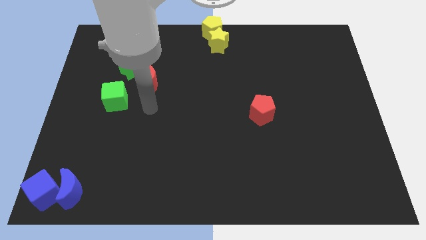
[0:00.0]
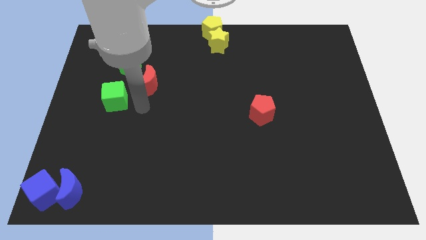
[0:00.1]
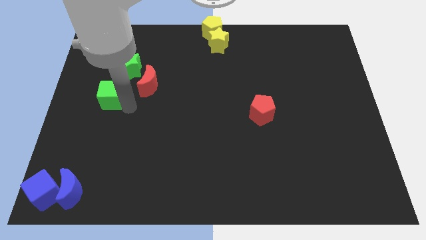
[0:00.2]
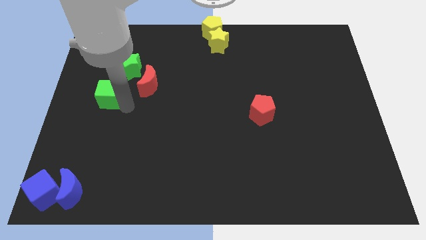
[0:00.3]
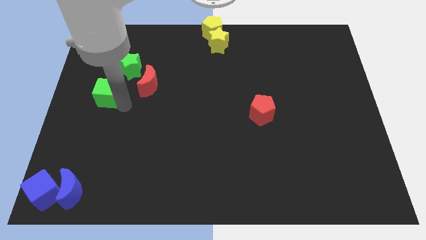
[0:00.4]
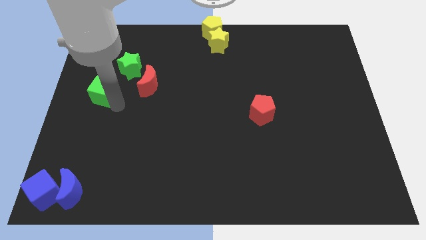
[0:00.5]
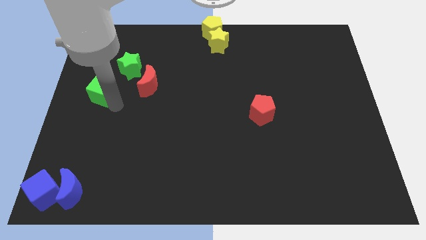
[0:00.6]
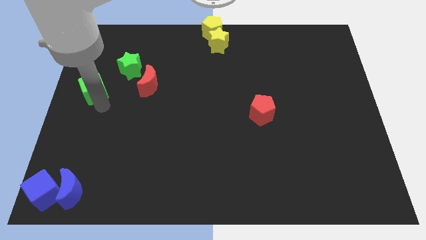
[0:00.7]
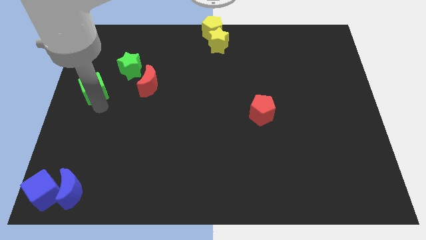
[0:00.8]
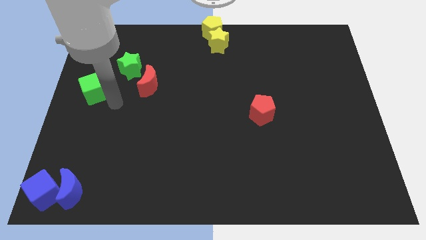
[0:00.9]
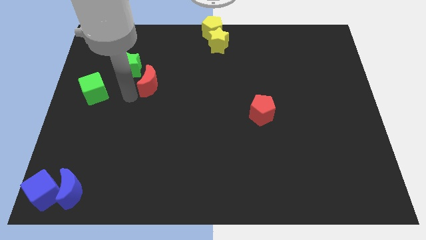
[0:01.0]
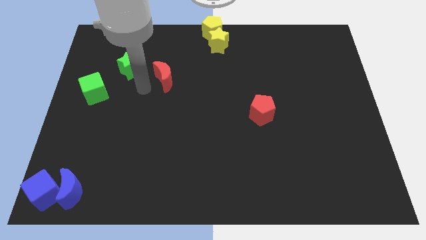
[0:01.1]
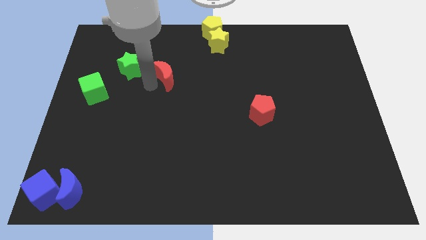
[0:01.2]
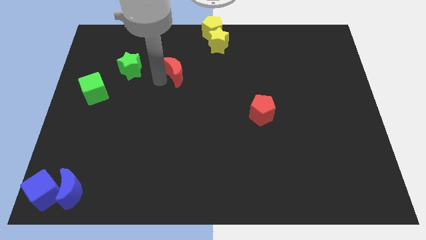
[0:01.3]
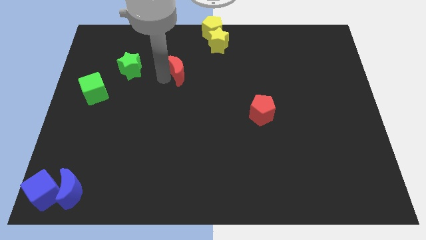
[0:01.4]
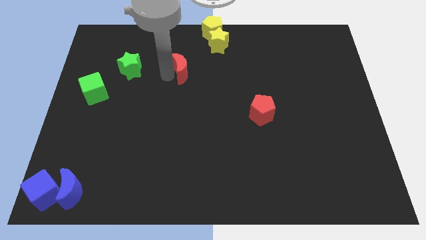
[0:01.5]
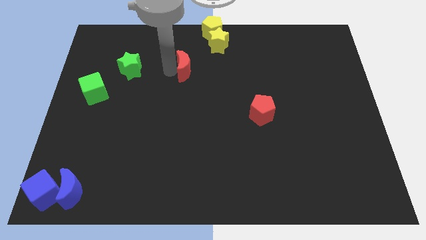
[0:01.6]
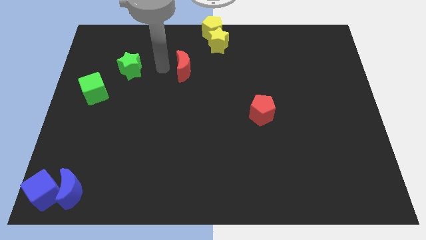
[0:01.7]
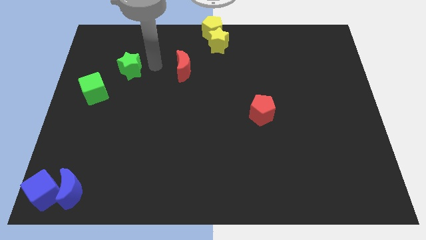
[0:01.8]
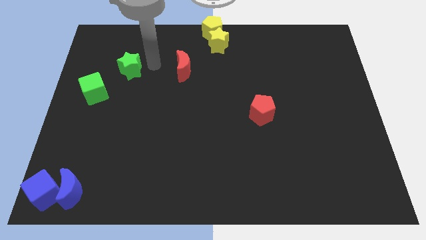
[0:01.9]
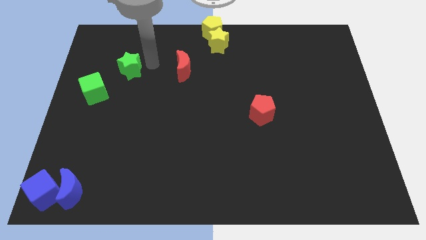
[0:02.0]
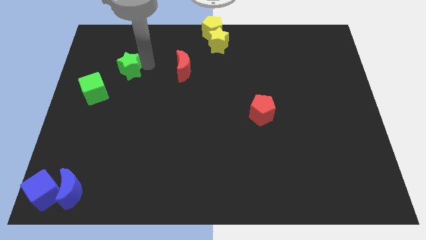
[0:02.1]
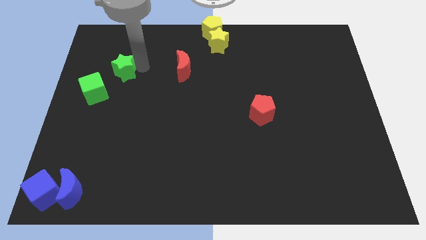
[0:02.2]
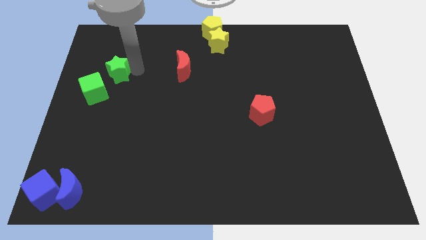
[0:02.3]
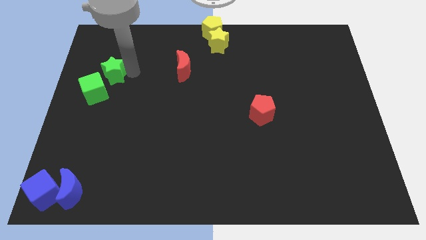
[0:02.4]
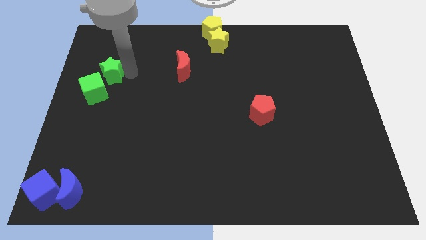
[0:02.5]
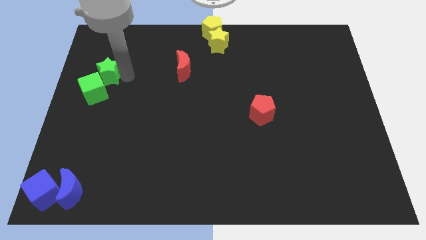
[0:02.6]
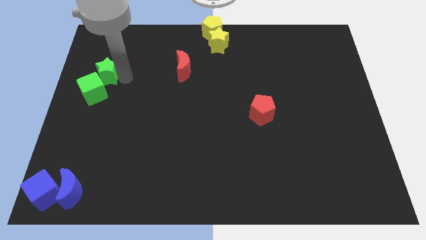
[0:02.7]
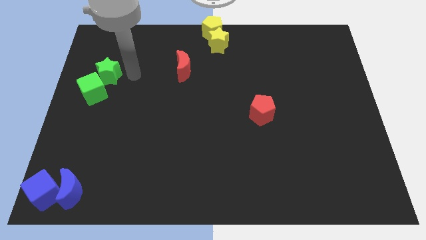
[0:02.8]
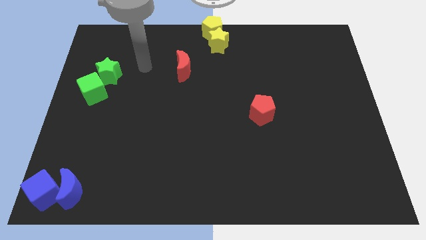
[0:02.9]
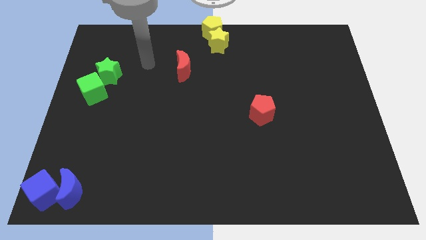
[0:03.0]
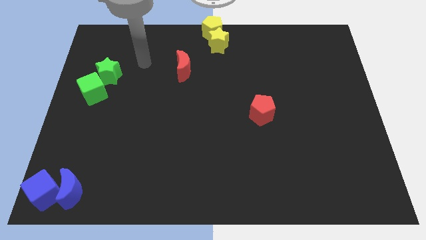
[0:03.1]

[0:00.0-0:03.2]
move the green star and green cube horizontally to the left side of the red moon

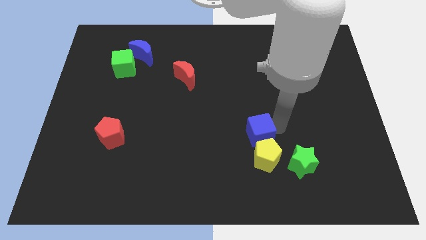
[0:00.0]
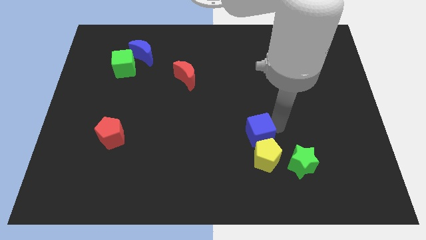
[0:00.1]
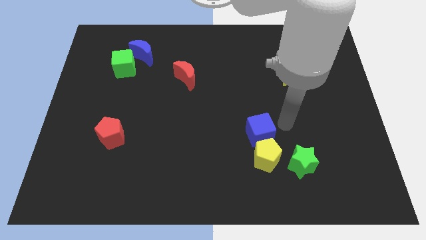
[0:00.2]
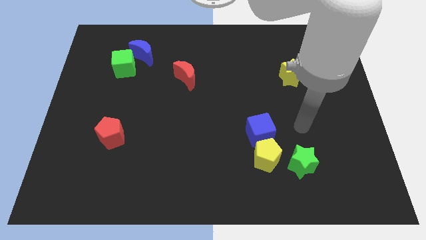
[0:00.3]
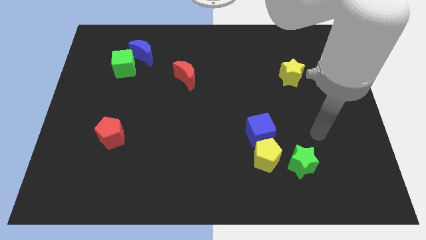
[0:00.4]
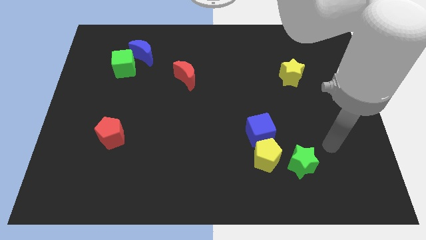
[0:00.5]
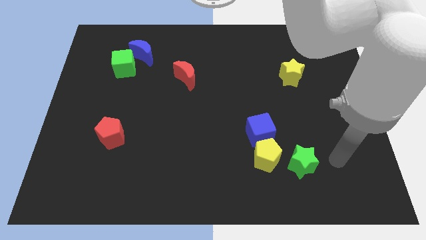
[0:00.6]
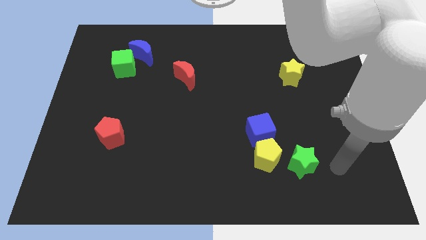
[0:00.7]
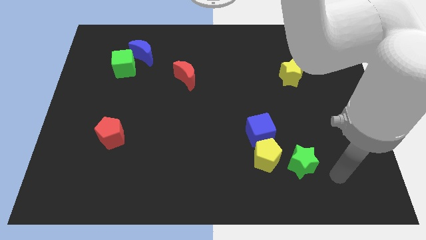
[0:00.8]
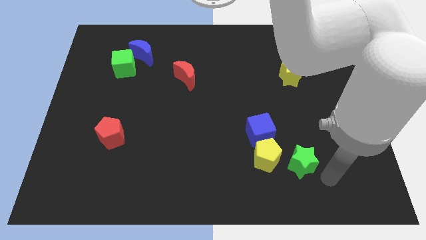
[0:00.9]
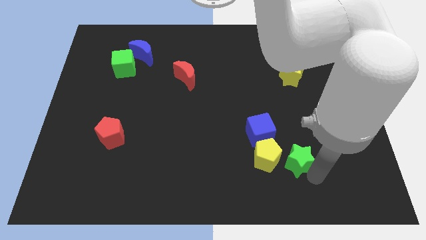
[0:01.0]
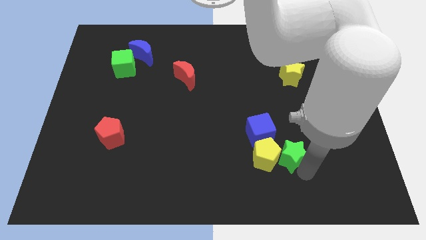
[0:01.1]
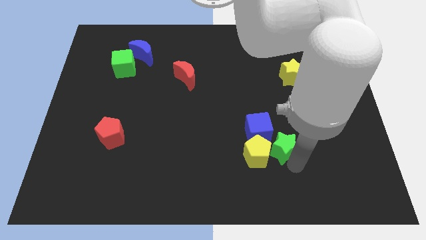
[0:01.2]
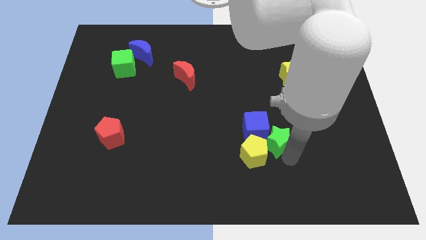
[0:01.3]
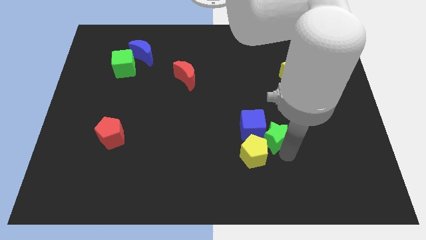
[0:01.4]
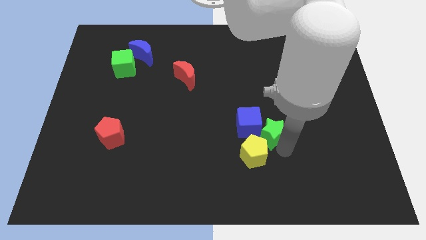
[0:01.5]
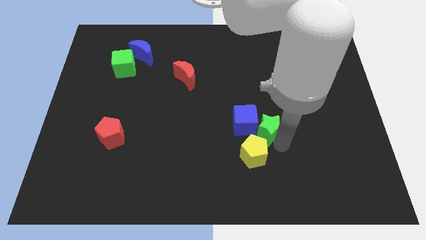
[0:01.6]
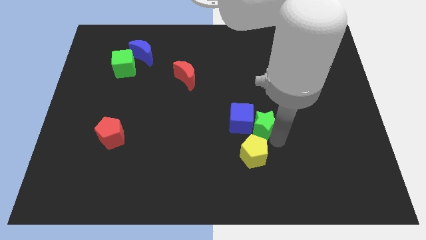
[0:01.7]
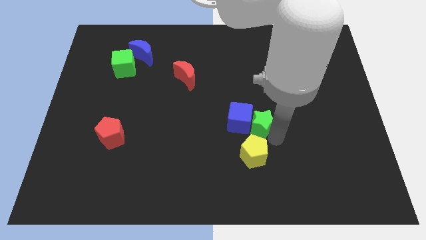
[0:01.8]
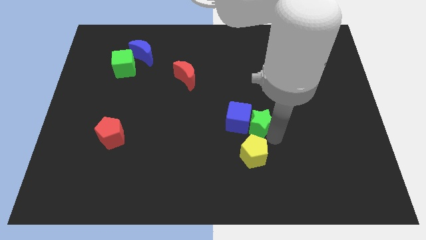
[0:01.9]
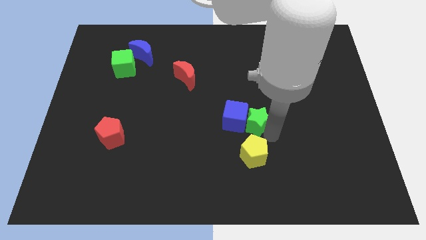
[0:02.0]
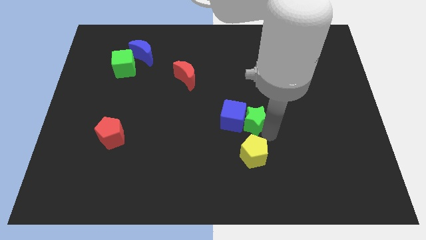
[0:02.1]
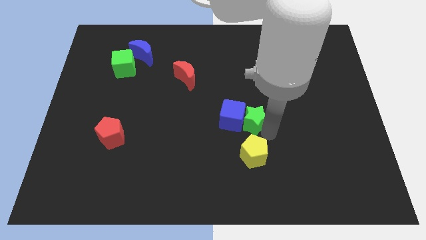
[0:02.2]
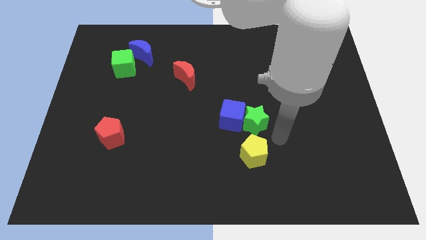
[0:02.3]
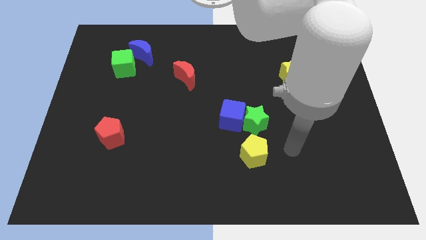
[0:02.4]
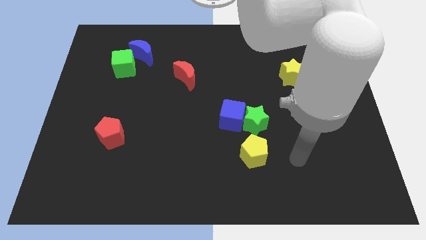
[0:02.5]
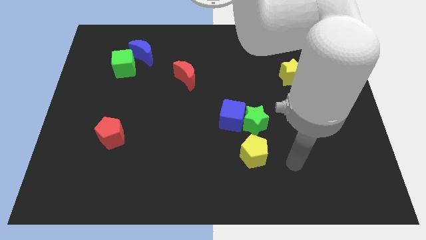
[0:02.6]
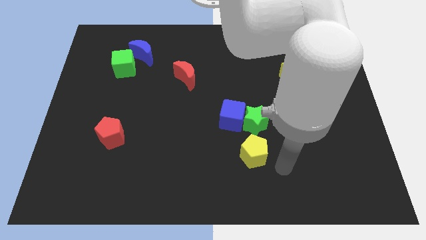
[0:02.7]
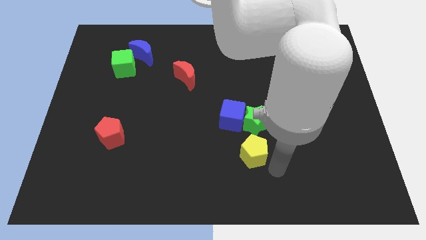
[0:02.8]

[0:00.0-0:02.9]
move the green star to the top side of the yellow pentagon

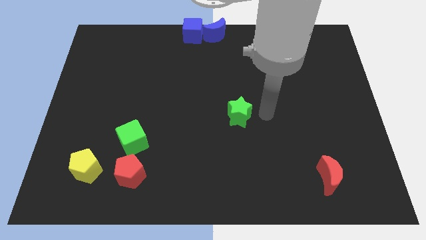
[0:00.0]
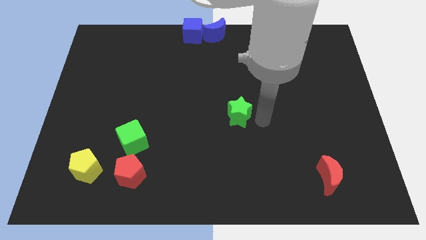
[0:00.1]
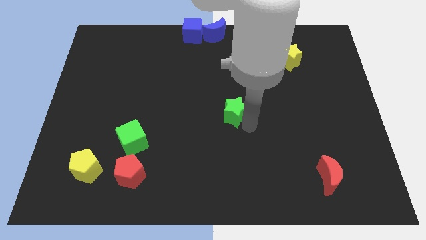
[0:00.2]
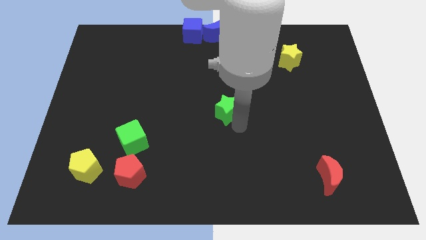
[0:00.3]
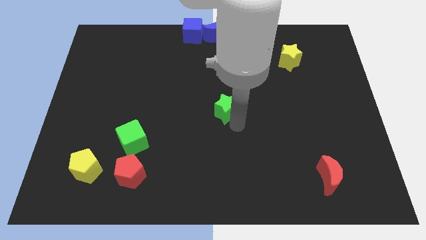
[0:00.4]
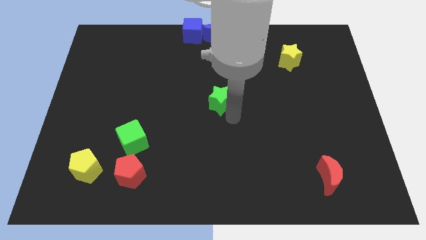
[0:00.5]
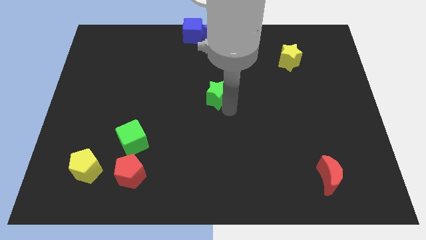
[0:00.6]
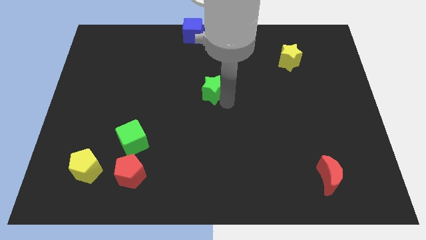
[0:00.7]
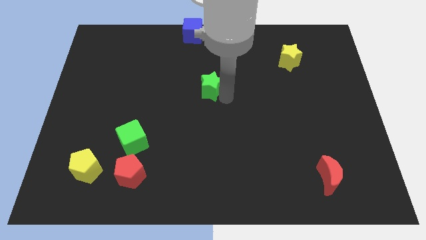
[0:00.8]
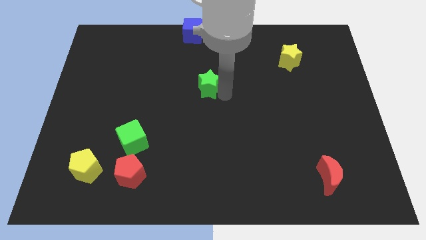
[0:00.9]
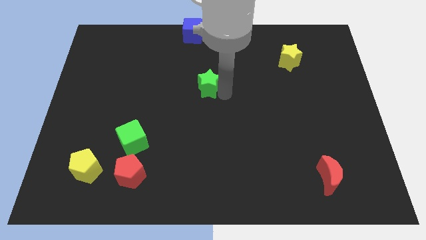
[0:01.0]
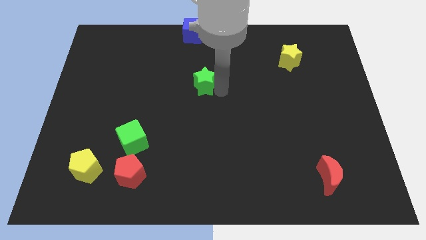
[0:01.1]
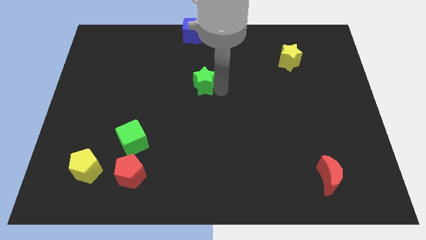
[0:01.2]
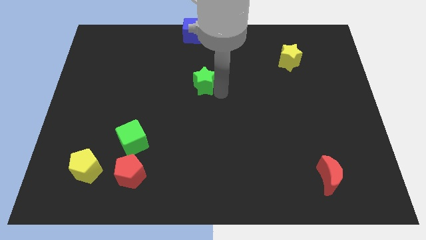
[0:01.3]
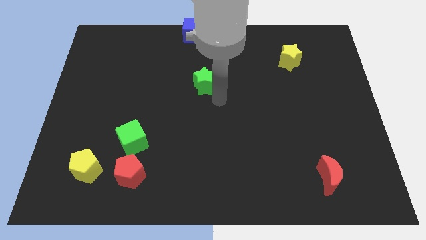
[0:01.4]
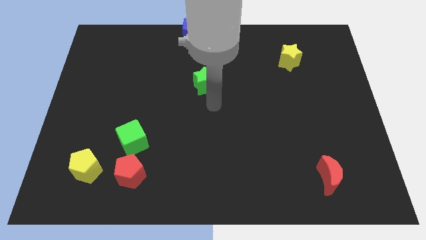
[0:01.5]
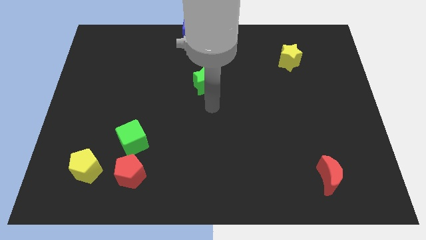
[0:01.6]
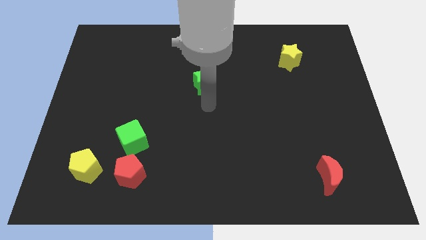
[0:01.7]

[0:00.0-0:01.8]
place green star below blue crescent

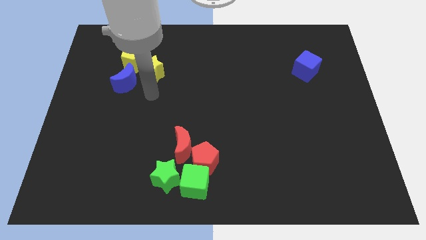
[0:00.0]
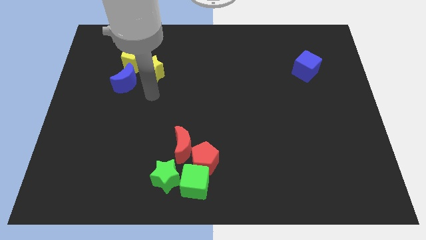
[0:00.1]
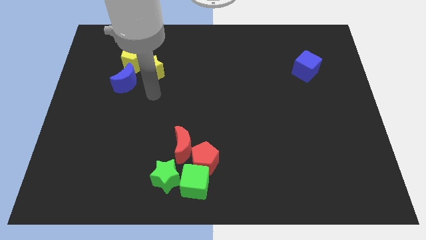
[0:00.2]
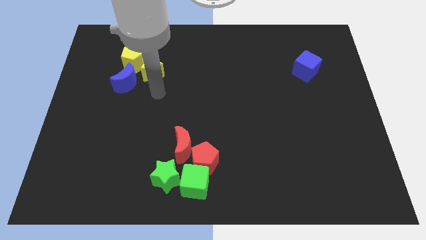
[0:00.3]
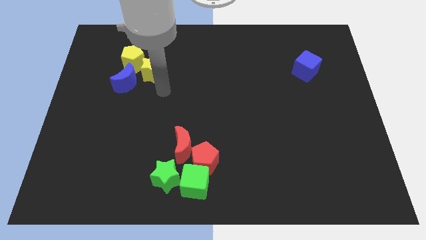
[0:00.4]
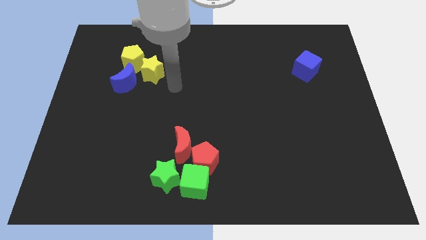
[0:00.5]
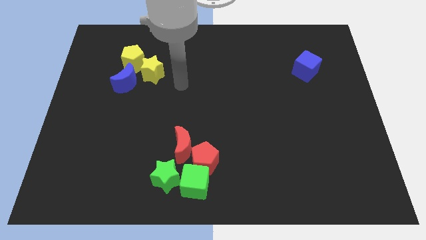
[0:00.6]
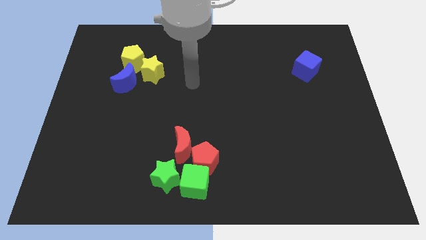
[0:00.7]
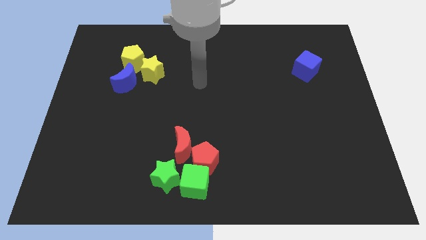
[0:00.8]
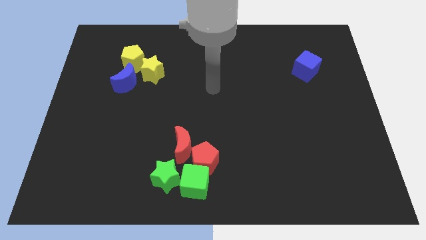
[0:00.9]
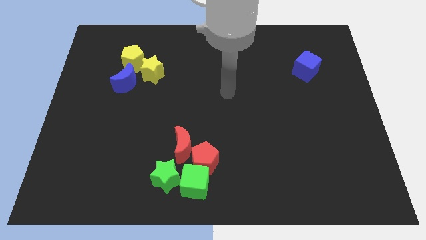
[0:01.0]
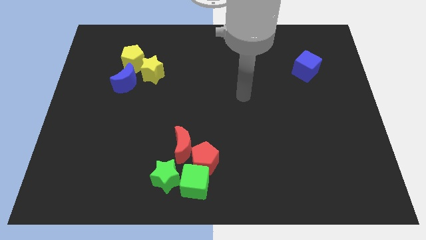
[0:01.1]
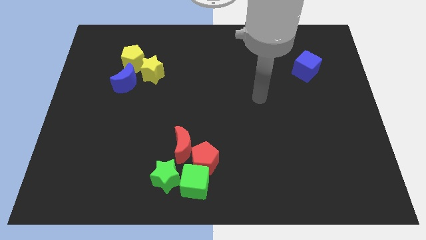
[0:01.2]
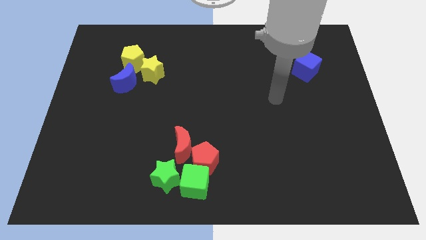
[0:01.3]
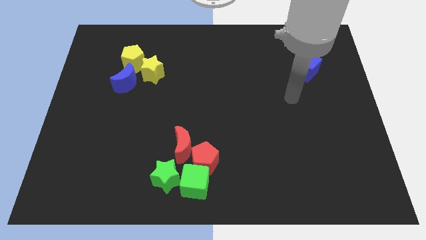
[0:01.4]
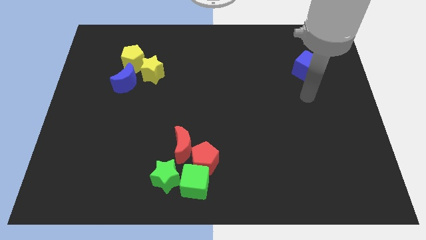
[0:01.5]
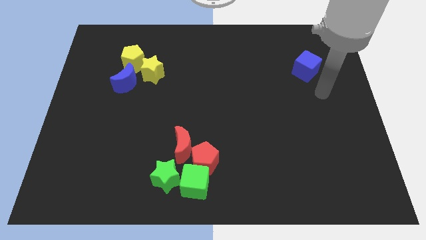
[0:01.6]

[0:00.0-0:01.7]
point your hand below the blue cube
